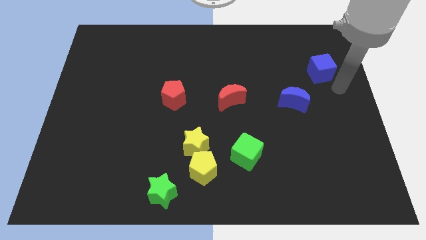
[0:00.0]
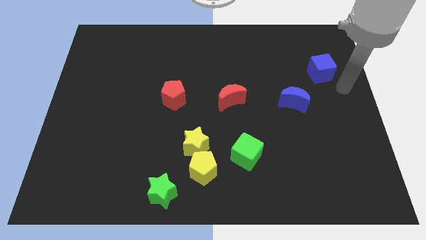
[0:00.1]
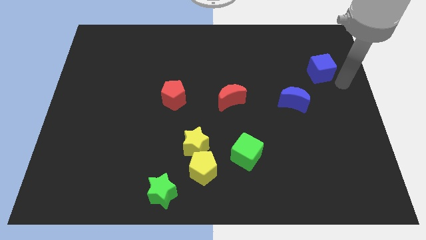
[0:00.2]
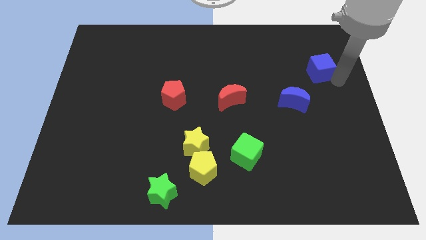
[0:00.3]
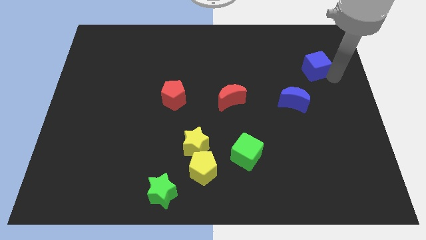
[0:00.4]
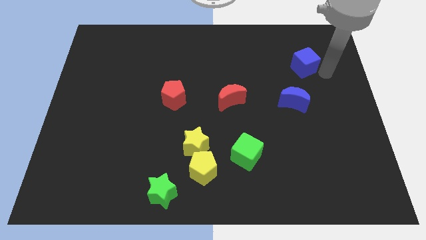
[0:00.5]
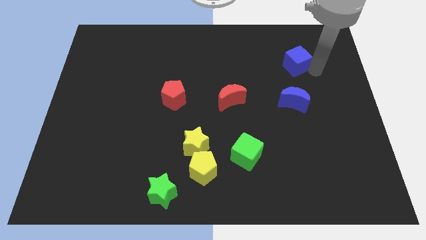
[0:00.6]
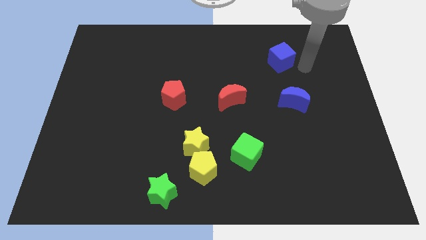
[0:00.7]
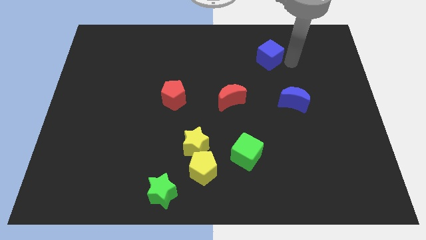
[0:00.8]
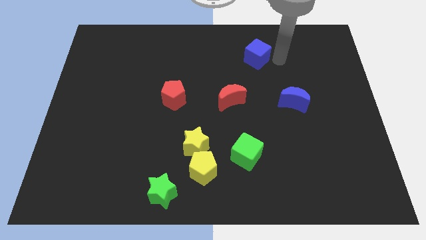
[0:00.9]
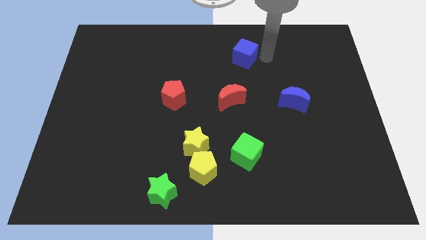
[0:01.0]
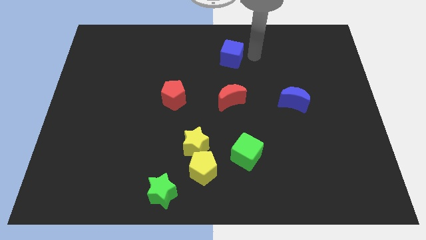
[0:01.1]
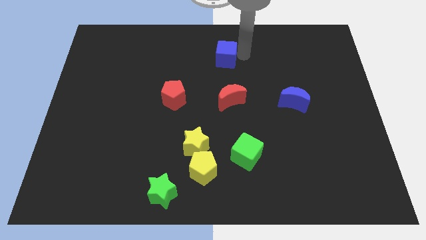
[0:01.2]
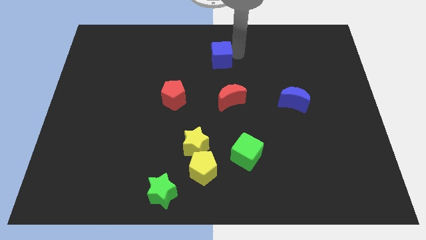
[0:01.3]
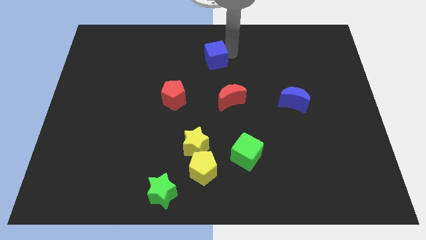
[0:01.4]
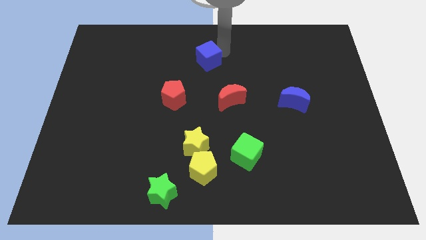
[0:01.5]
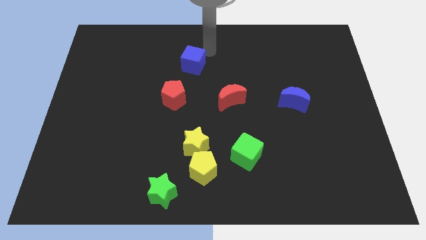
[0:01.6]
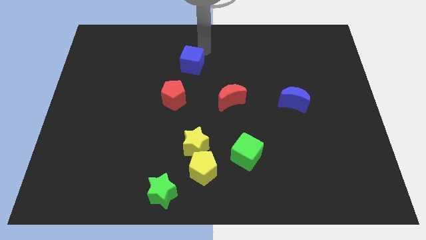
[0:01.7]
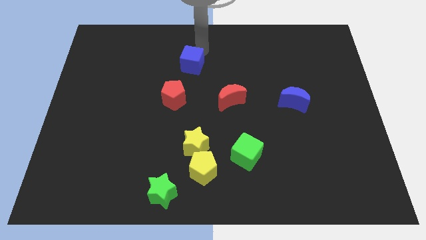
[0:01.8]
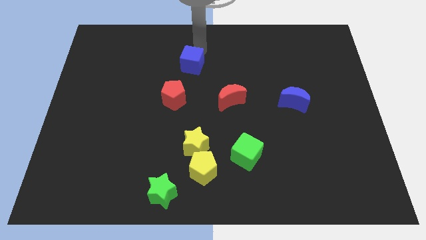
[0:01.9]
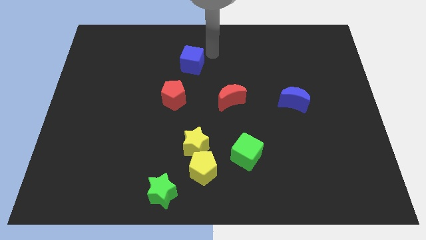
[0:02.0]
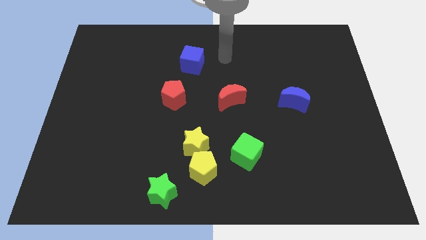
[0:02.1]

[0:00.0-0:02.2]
slide blue cube to the top right of red pentagon

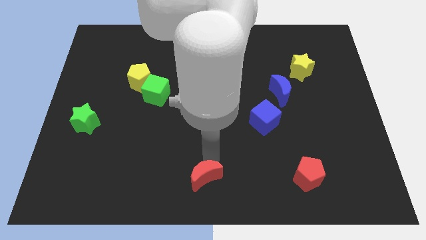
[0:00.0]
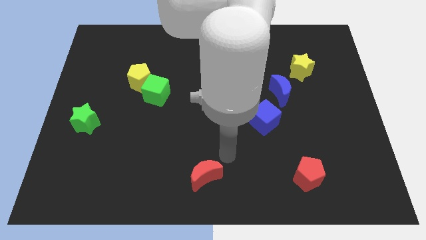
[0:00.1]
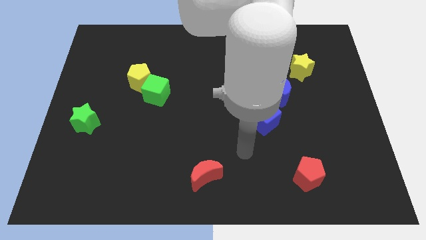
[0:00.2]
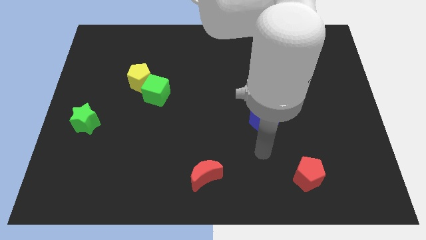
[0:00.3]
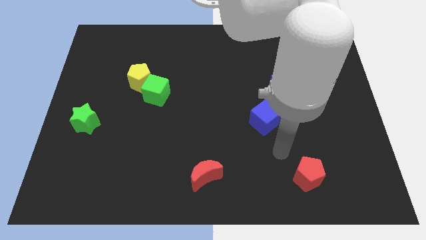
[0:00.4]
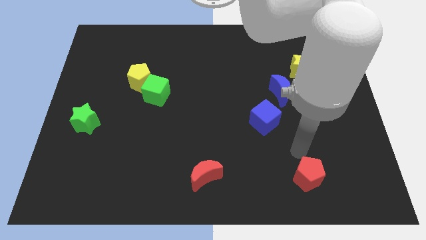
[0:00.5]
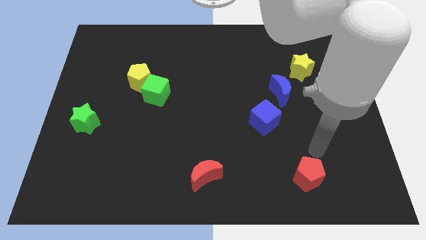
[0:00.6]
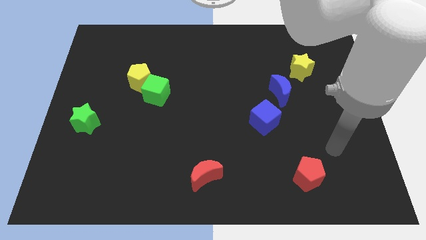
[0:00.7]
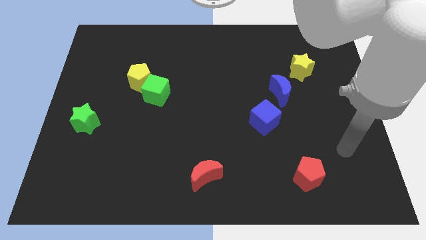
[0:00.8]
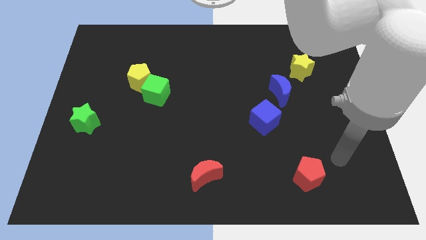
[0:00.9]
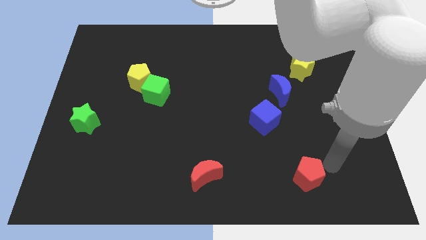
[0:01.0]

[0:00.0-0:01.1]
move your arm to the right of red pentagon

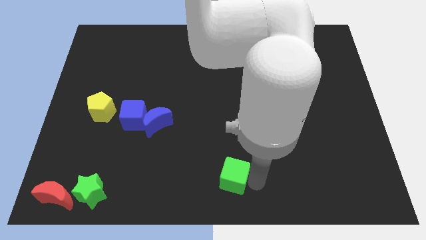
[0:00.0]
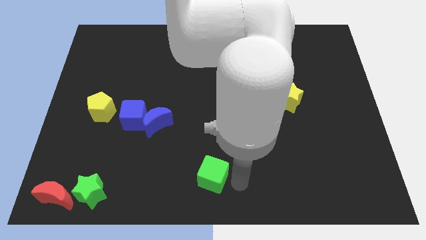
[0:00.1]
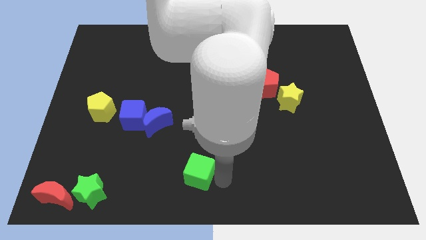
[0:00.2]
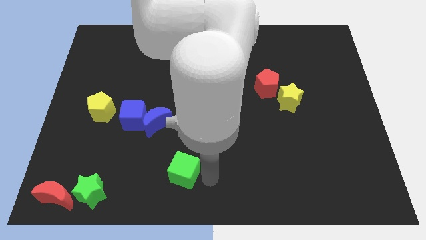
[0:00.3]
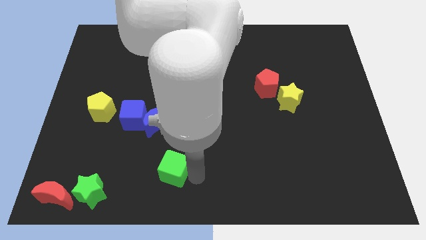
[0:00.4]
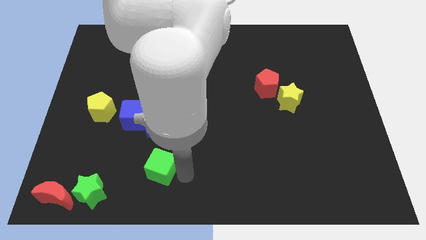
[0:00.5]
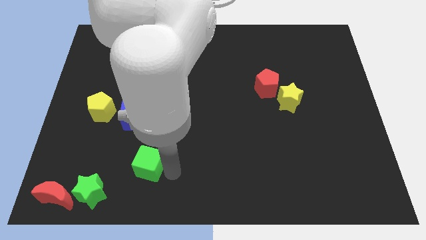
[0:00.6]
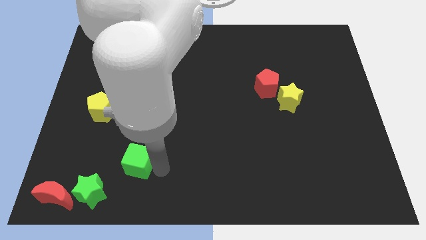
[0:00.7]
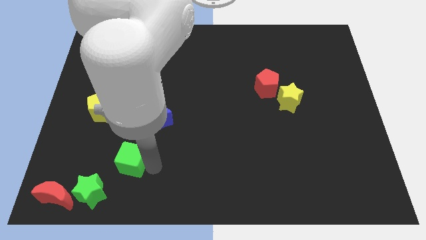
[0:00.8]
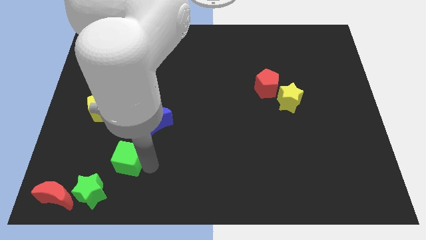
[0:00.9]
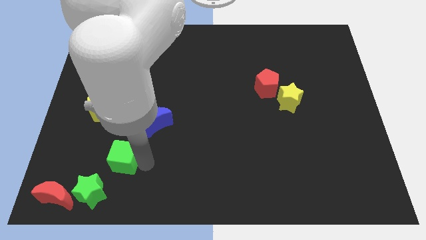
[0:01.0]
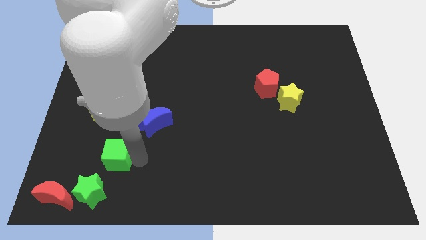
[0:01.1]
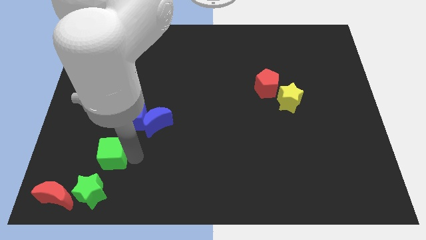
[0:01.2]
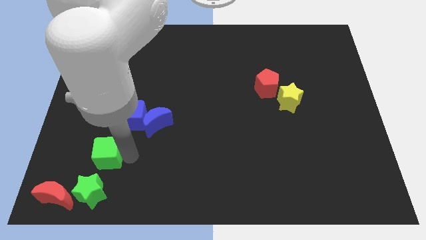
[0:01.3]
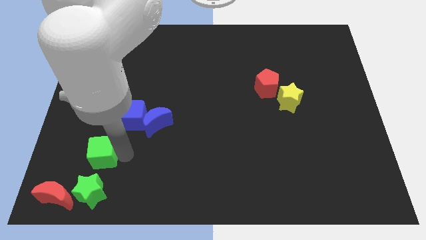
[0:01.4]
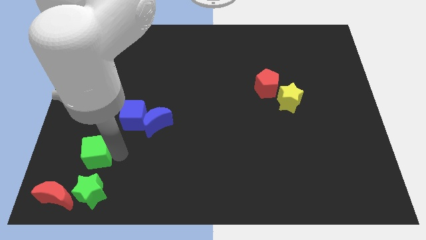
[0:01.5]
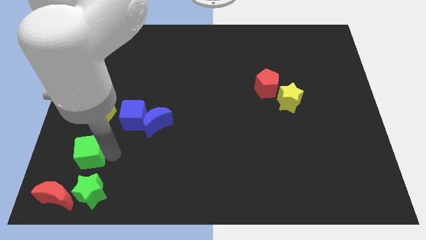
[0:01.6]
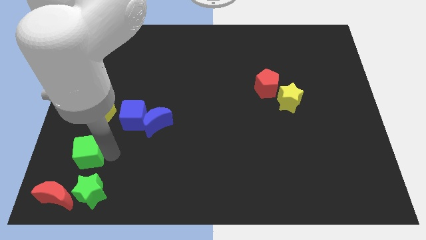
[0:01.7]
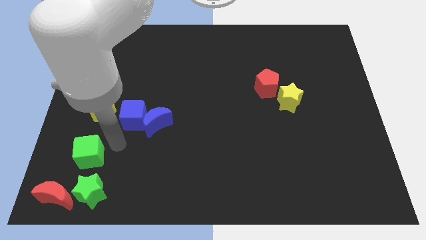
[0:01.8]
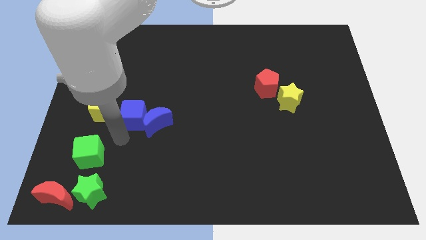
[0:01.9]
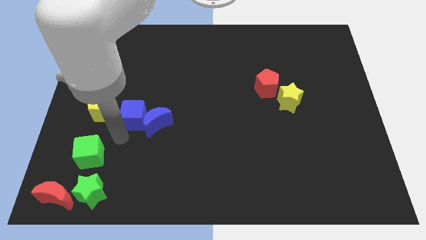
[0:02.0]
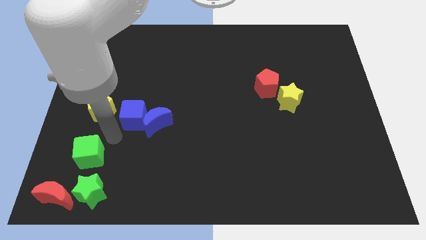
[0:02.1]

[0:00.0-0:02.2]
put the green cube above the green star

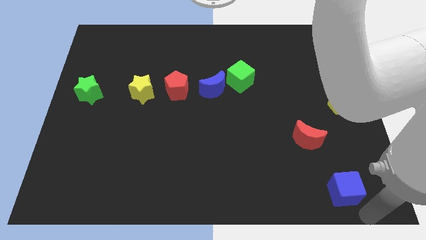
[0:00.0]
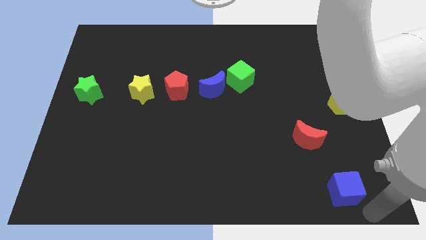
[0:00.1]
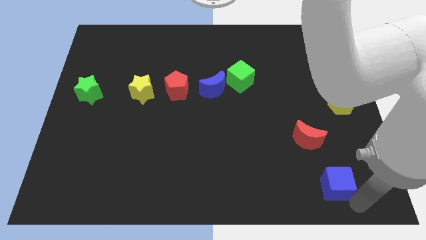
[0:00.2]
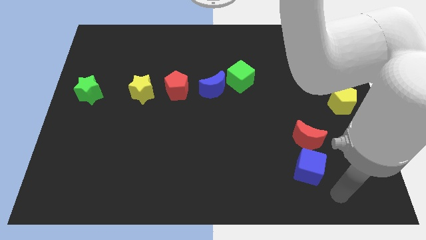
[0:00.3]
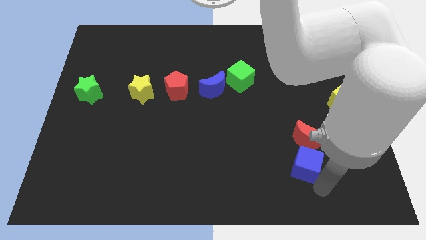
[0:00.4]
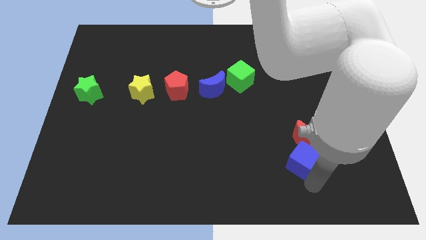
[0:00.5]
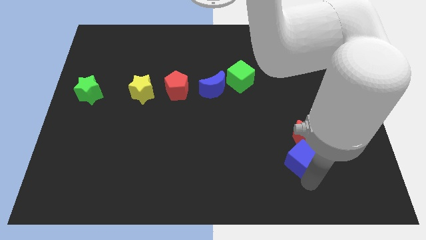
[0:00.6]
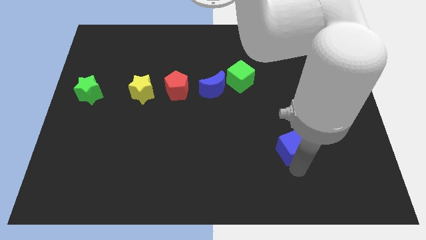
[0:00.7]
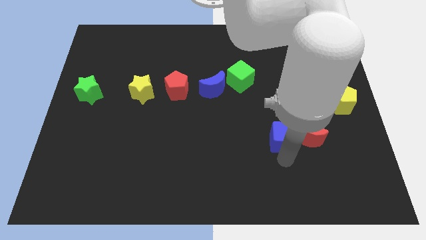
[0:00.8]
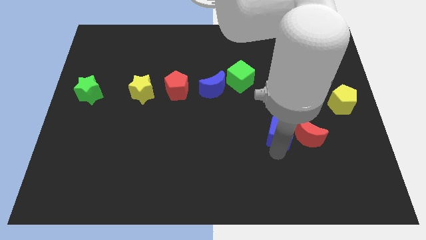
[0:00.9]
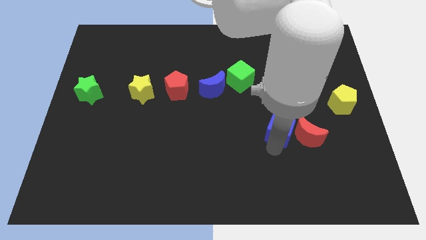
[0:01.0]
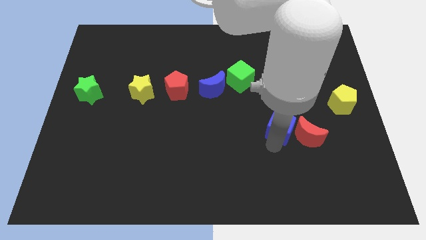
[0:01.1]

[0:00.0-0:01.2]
place the blue cube left of the red crescent

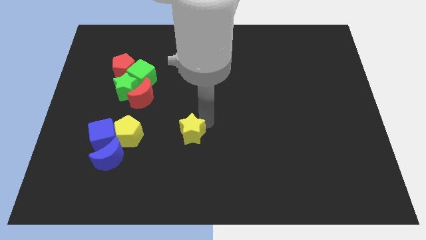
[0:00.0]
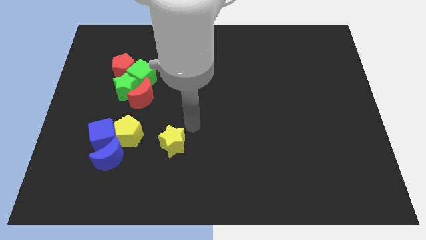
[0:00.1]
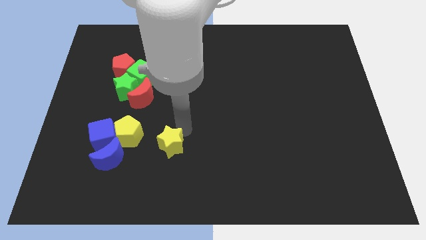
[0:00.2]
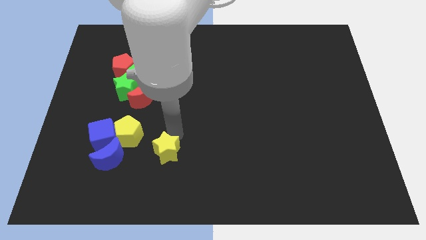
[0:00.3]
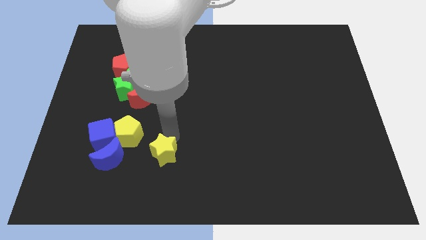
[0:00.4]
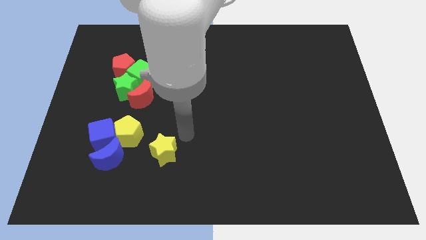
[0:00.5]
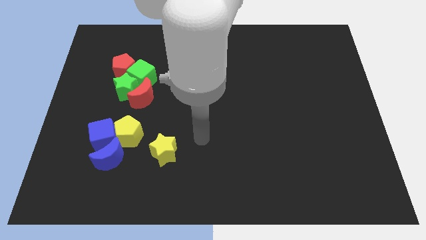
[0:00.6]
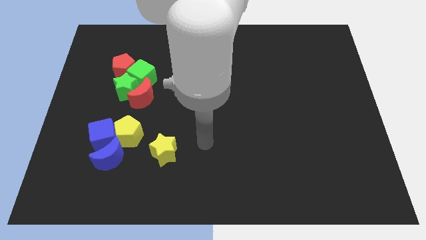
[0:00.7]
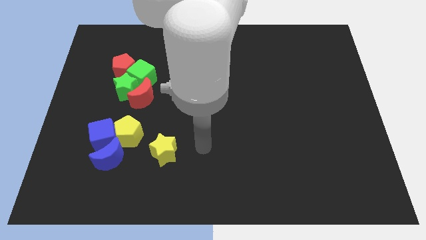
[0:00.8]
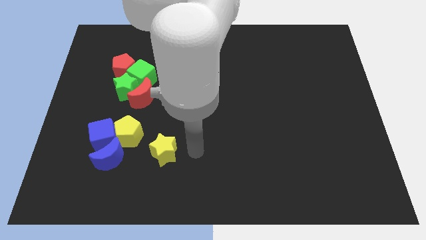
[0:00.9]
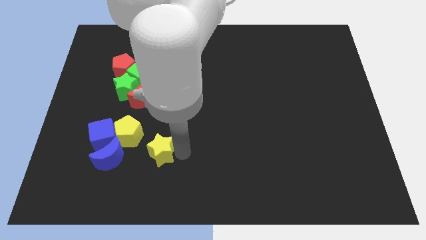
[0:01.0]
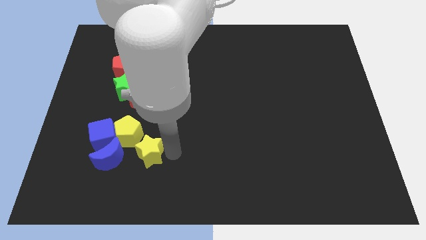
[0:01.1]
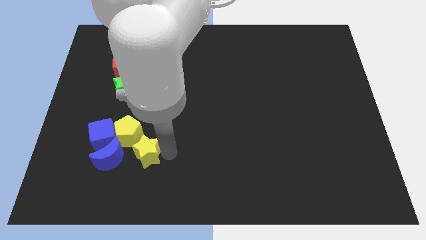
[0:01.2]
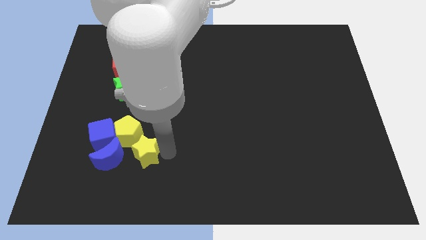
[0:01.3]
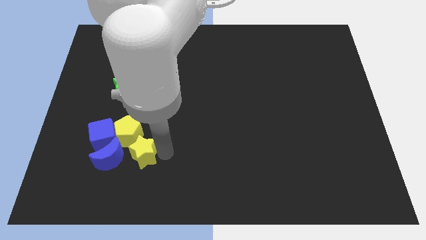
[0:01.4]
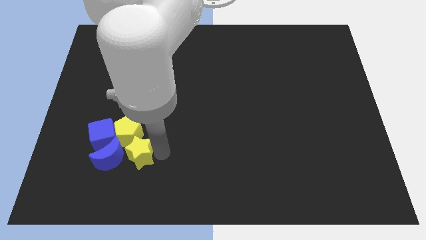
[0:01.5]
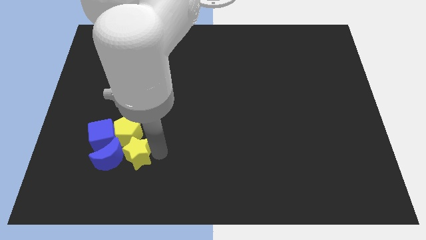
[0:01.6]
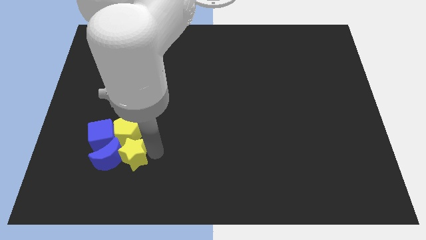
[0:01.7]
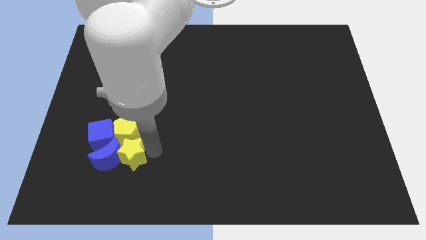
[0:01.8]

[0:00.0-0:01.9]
align the yellow star below the yellow pentagon

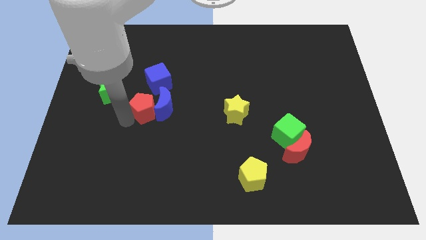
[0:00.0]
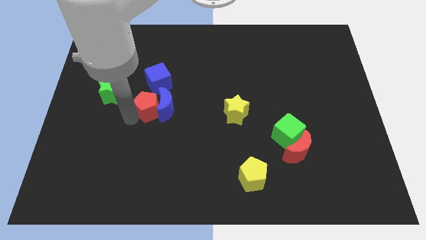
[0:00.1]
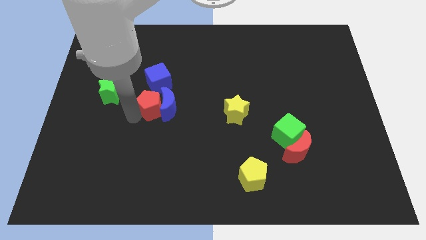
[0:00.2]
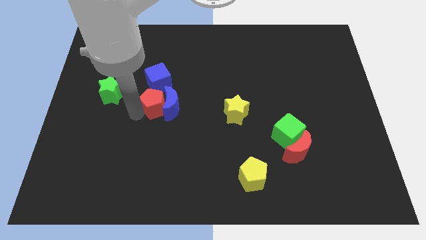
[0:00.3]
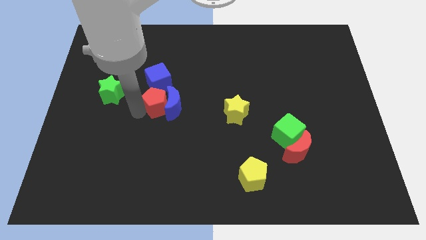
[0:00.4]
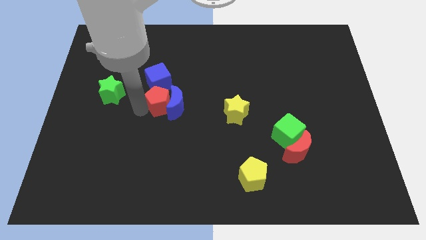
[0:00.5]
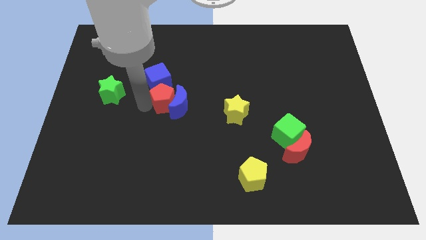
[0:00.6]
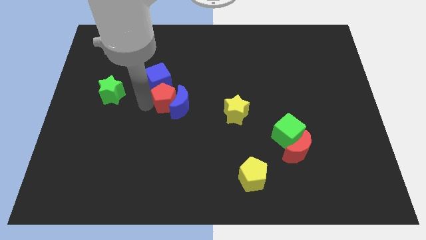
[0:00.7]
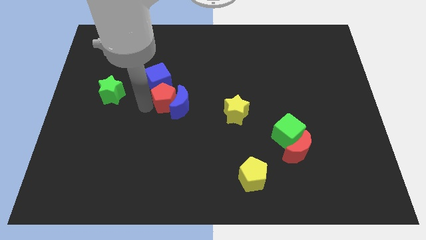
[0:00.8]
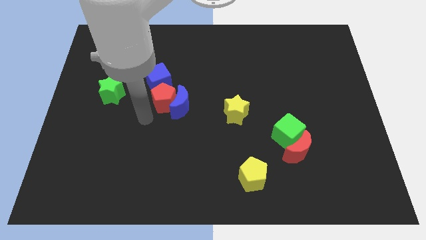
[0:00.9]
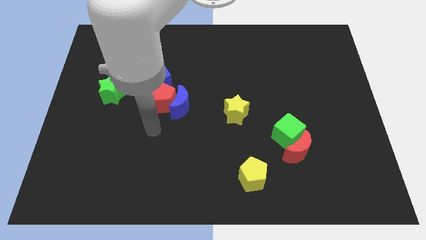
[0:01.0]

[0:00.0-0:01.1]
push the red pentagon to the bottom of the blue cube
